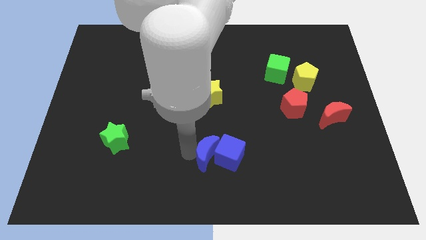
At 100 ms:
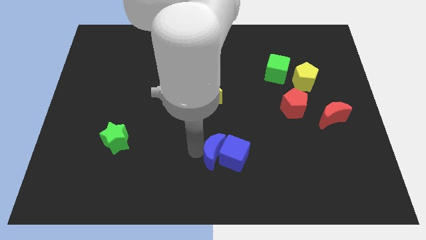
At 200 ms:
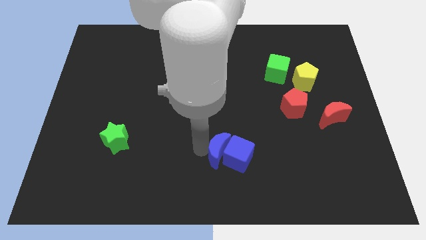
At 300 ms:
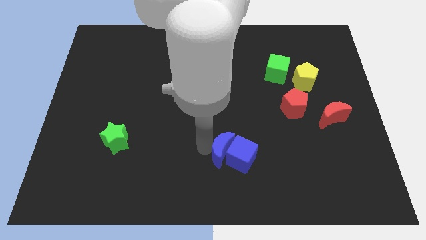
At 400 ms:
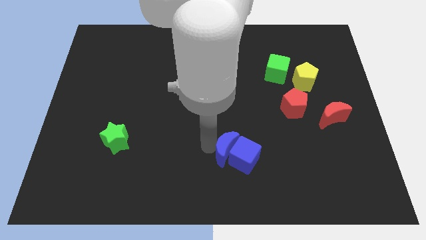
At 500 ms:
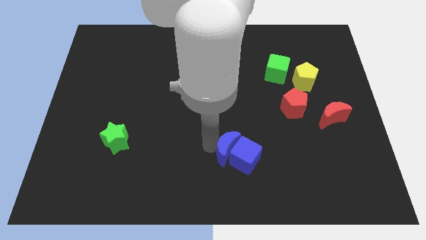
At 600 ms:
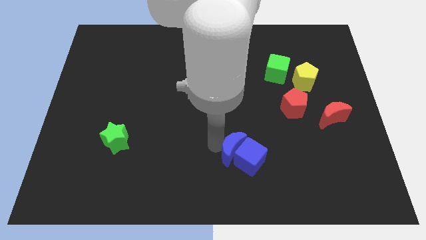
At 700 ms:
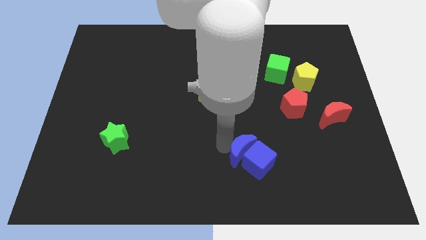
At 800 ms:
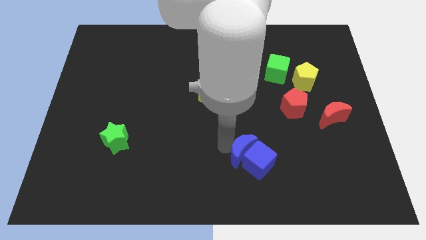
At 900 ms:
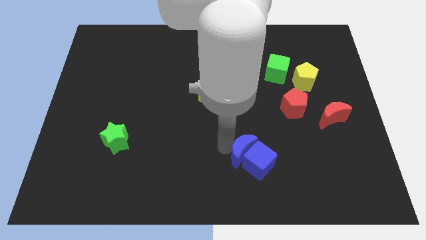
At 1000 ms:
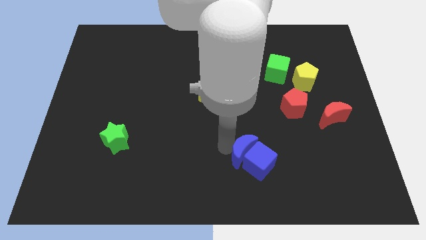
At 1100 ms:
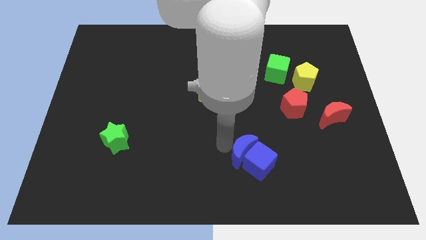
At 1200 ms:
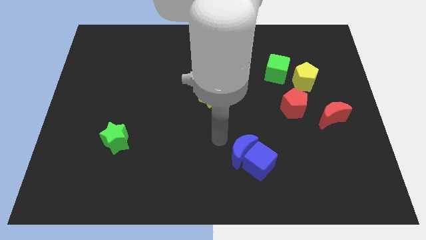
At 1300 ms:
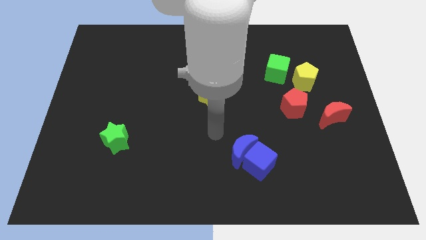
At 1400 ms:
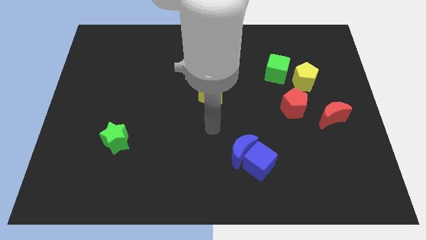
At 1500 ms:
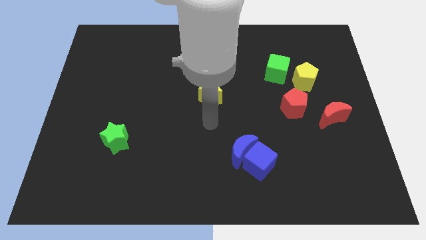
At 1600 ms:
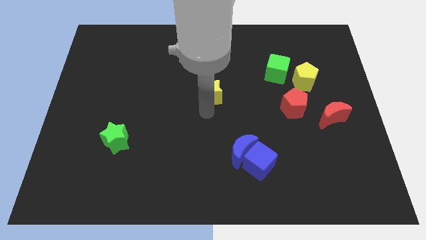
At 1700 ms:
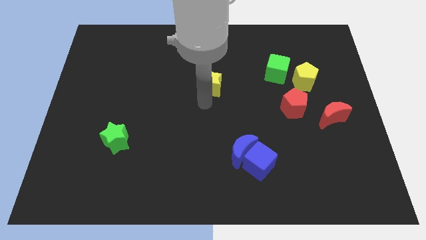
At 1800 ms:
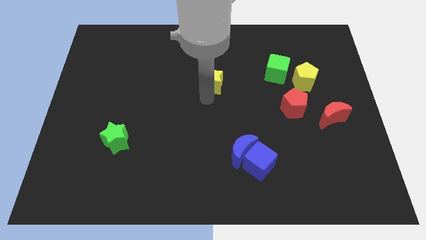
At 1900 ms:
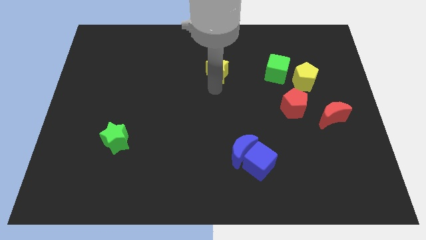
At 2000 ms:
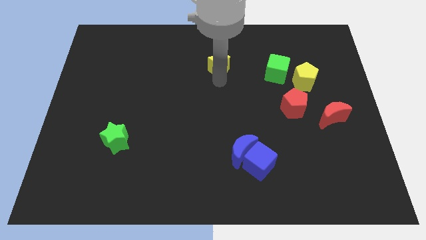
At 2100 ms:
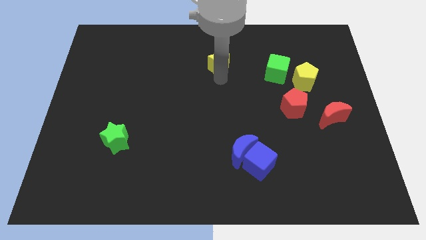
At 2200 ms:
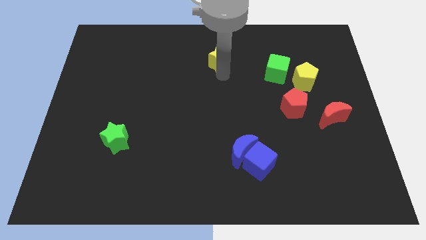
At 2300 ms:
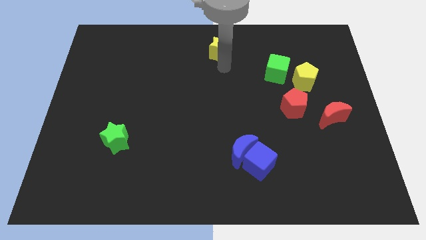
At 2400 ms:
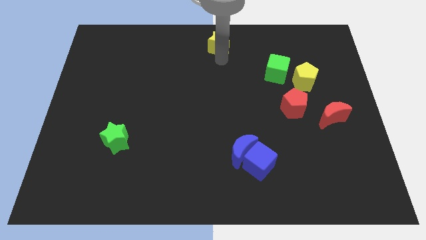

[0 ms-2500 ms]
move the blue blocks slightly towards the right side

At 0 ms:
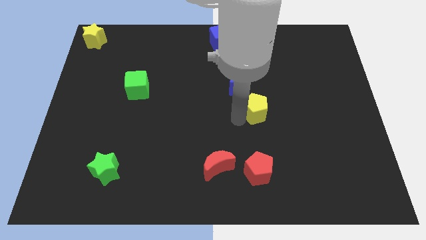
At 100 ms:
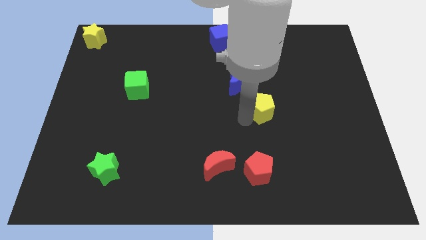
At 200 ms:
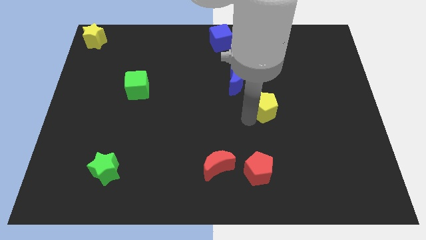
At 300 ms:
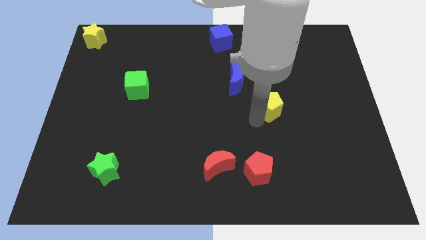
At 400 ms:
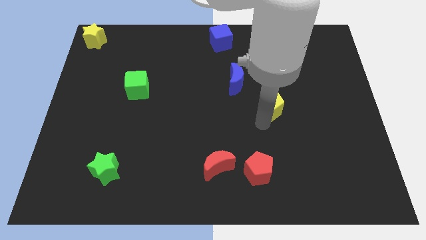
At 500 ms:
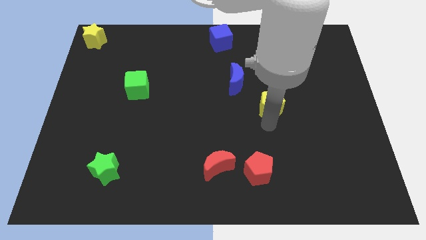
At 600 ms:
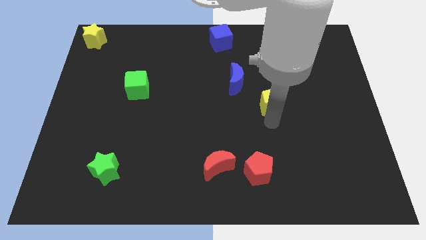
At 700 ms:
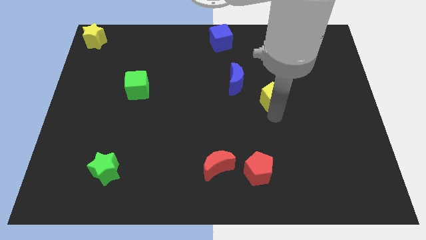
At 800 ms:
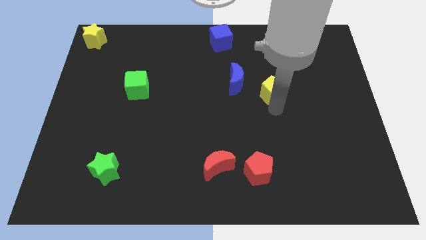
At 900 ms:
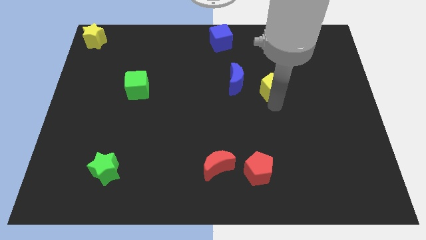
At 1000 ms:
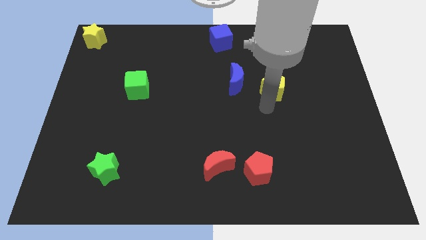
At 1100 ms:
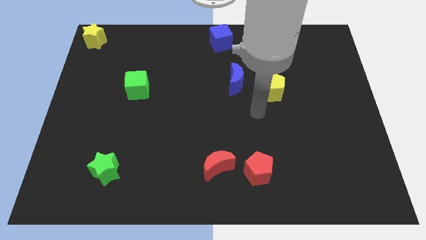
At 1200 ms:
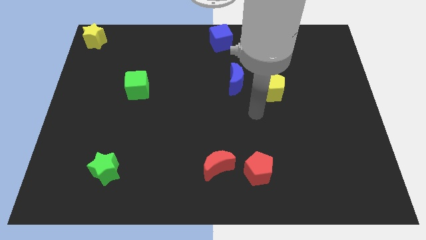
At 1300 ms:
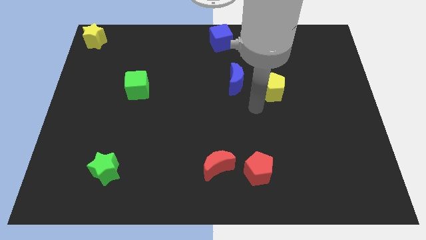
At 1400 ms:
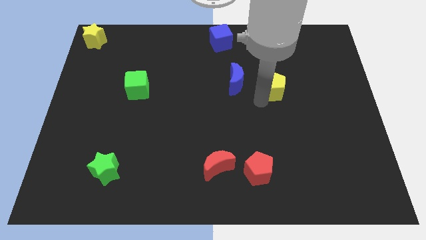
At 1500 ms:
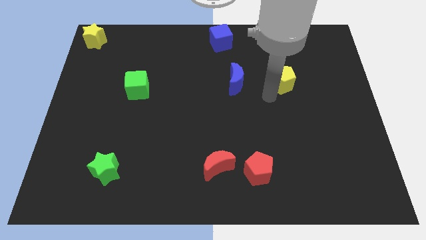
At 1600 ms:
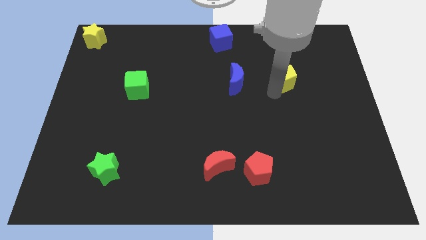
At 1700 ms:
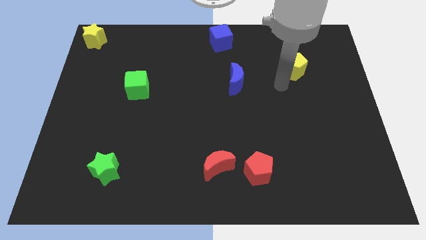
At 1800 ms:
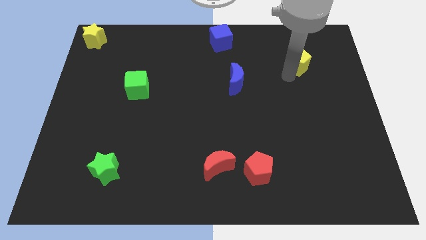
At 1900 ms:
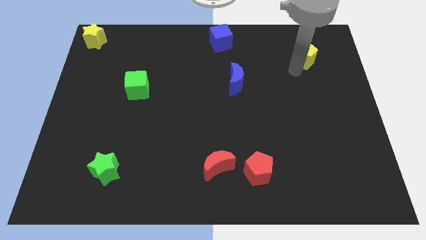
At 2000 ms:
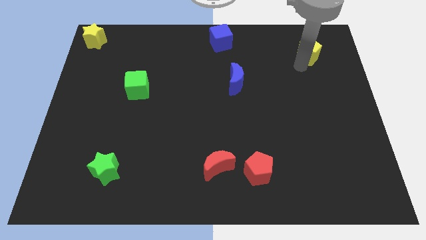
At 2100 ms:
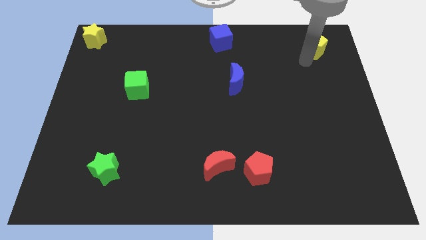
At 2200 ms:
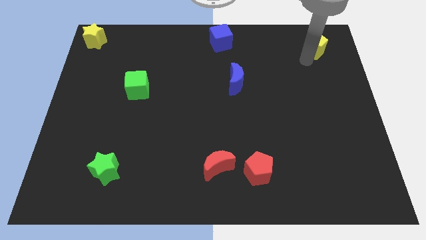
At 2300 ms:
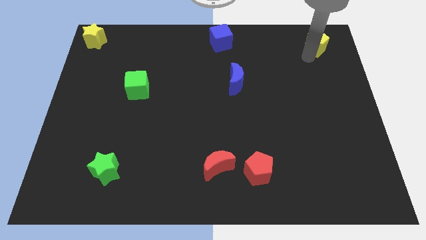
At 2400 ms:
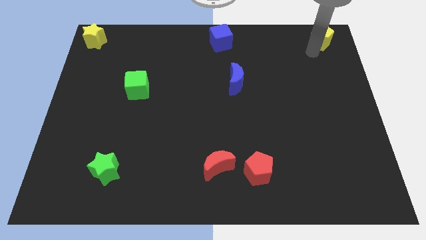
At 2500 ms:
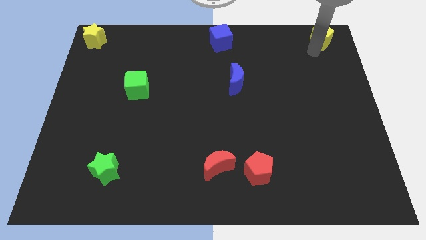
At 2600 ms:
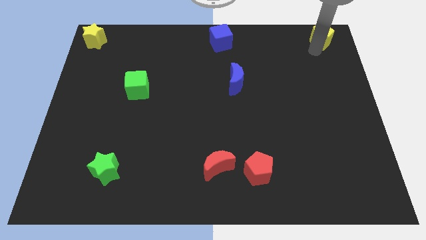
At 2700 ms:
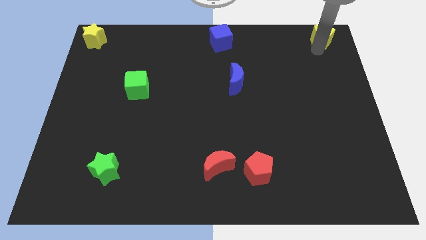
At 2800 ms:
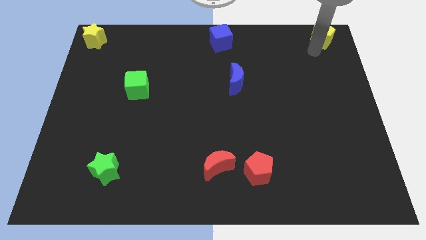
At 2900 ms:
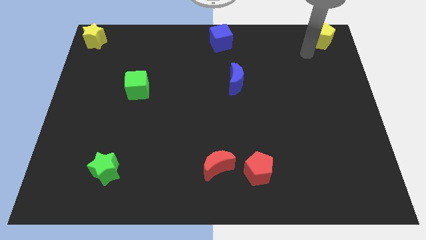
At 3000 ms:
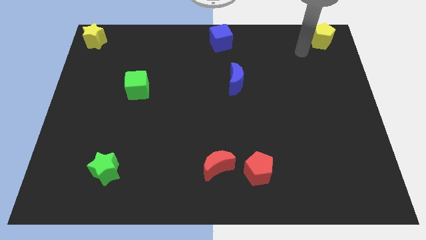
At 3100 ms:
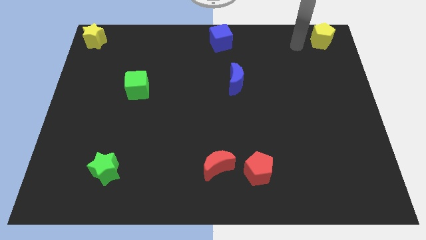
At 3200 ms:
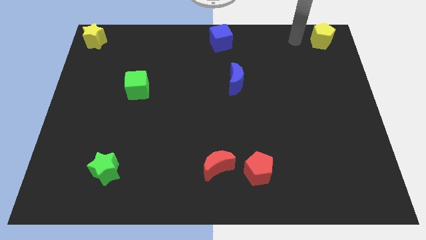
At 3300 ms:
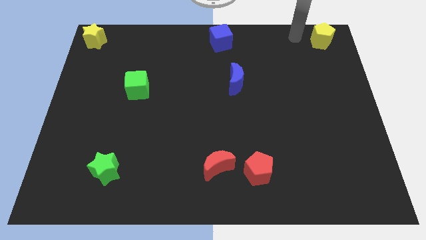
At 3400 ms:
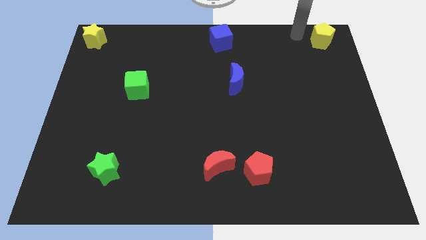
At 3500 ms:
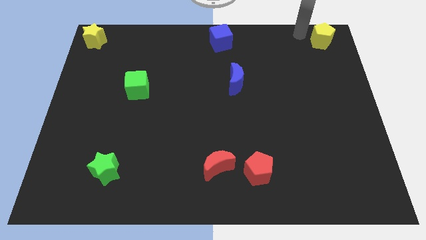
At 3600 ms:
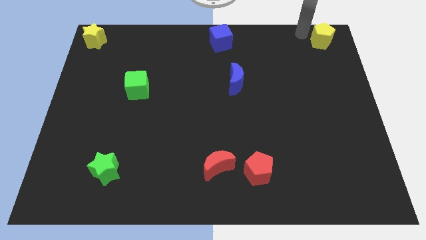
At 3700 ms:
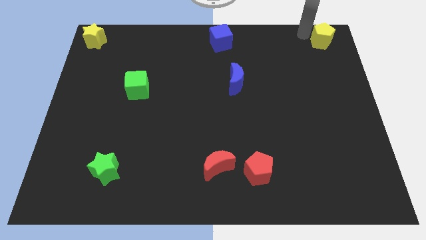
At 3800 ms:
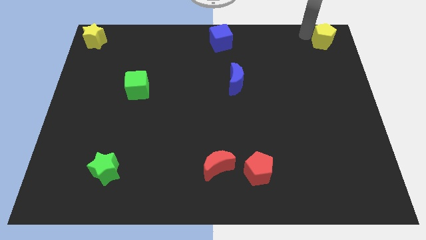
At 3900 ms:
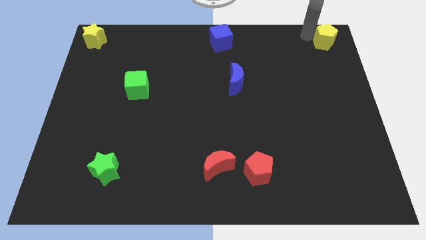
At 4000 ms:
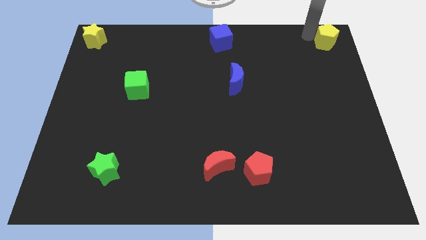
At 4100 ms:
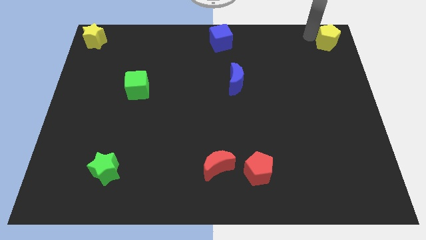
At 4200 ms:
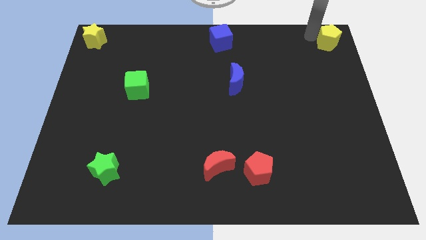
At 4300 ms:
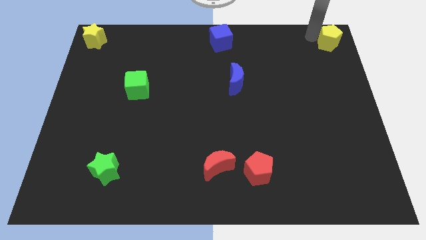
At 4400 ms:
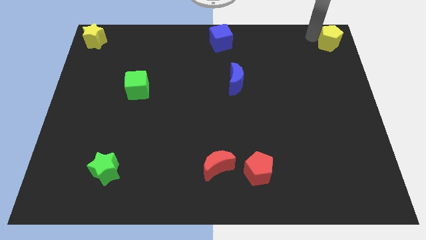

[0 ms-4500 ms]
push yellow pentagon to the top right corner of the board

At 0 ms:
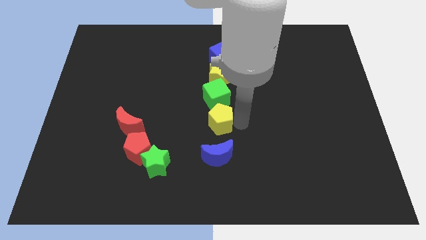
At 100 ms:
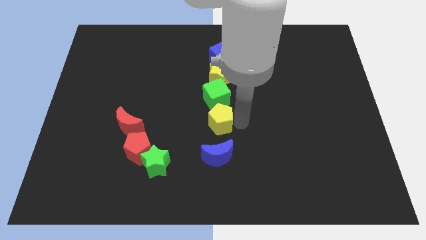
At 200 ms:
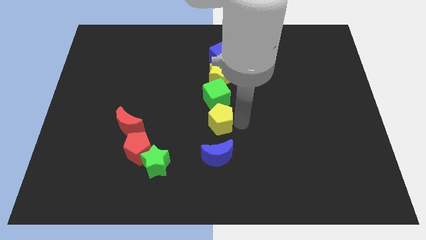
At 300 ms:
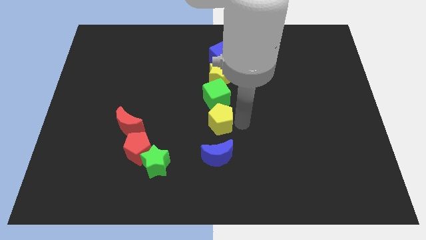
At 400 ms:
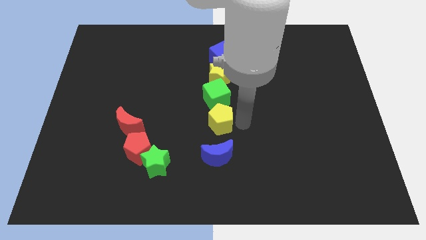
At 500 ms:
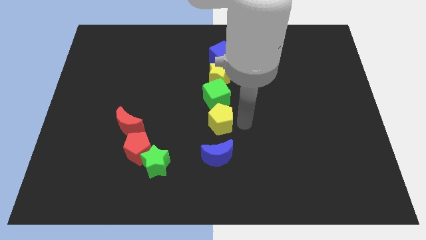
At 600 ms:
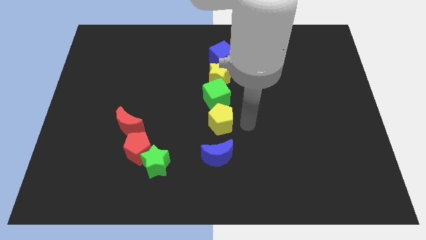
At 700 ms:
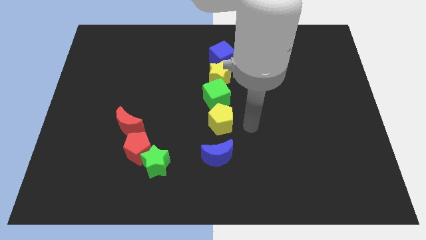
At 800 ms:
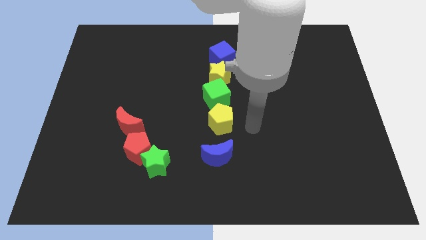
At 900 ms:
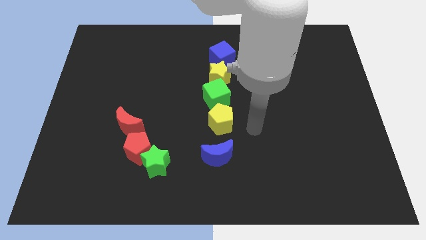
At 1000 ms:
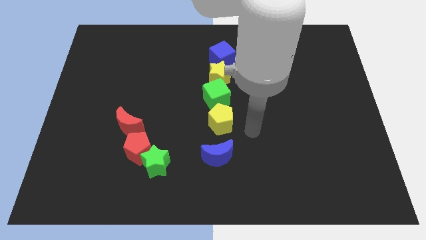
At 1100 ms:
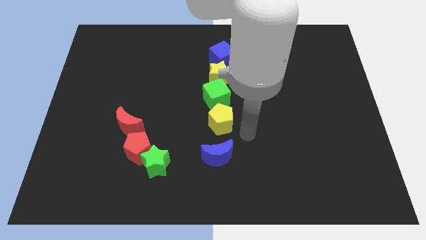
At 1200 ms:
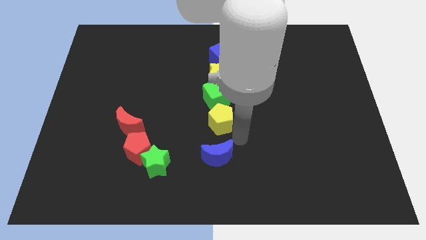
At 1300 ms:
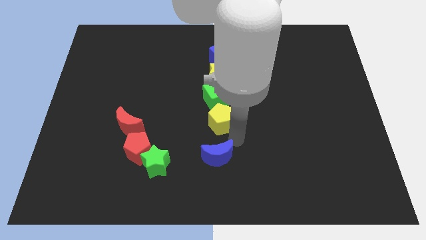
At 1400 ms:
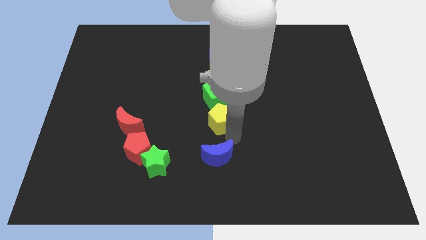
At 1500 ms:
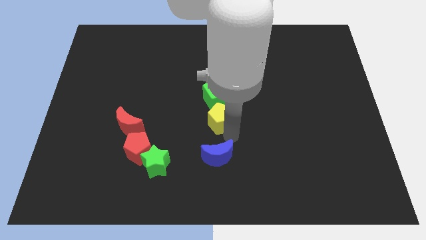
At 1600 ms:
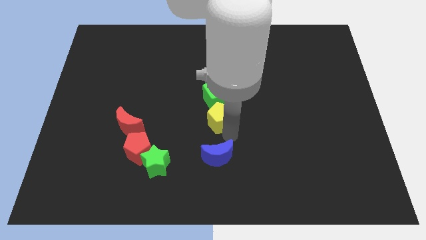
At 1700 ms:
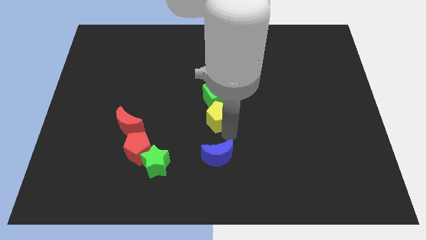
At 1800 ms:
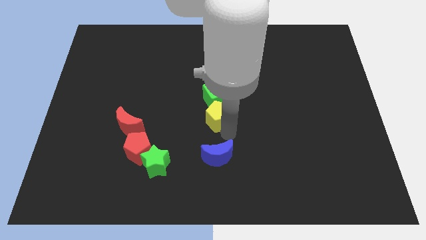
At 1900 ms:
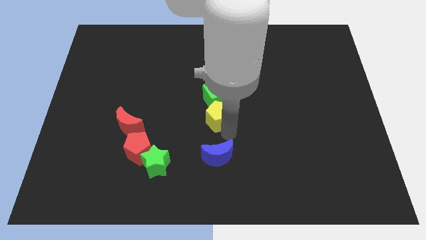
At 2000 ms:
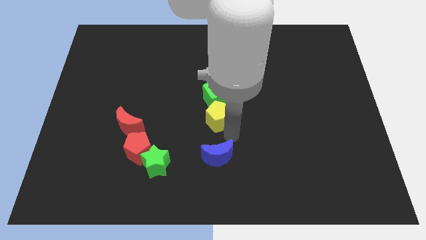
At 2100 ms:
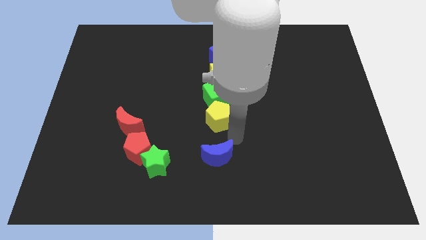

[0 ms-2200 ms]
push the yellow pentagon towards the green cube
